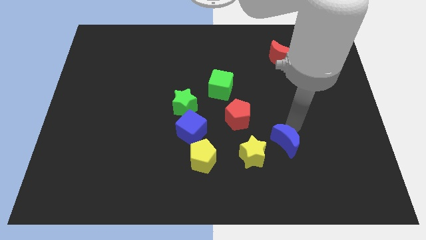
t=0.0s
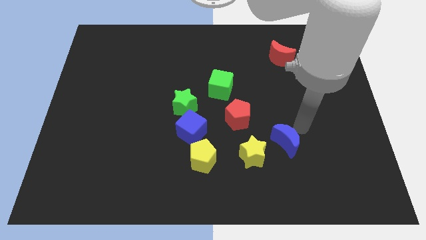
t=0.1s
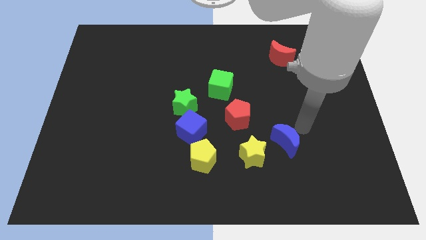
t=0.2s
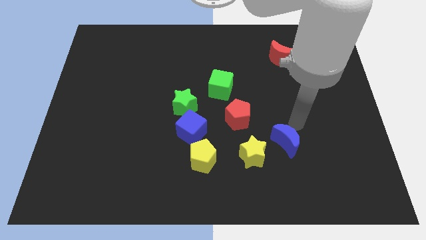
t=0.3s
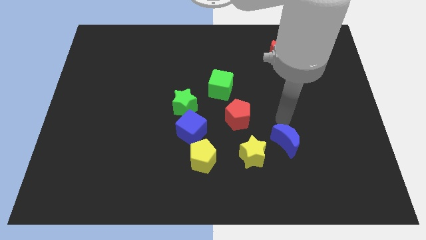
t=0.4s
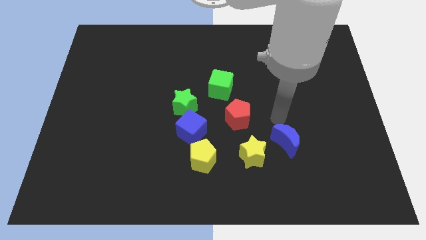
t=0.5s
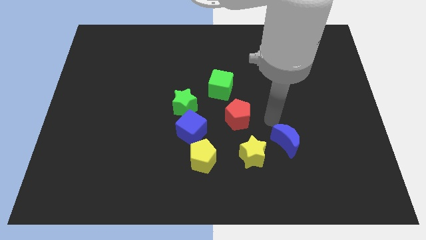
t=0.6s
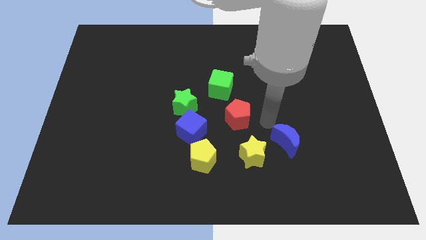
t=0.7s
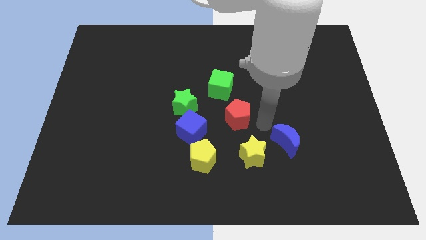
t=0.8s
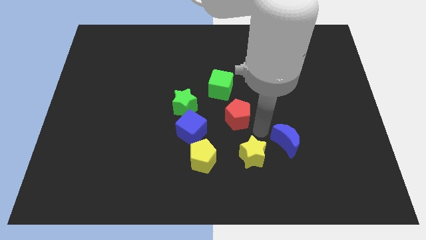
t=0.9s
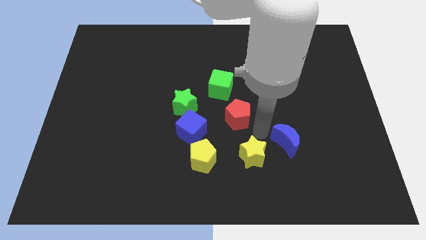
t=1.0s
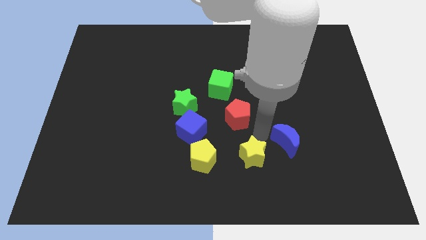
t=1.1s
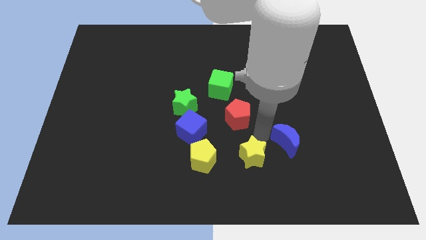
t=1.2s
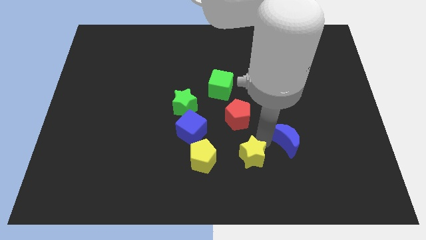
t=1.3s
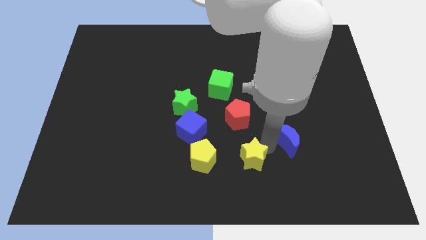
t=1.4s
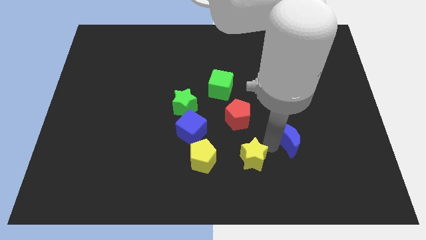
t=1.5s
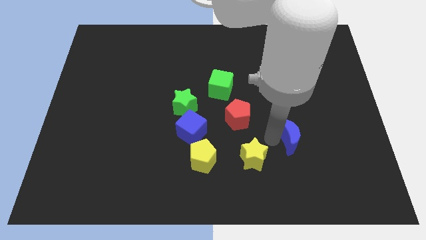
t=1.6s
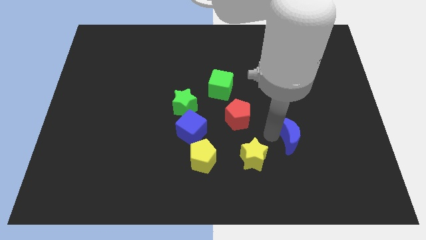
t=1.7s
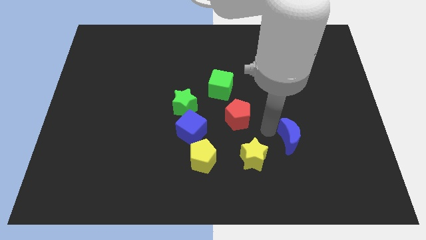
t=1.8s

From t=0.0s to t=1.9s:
point your arm close to blue moon

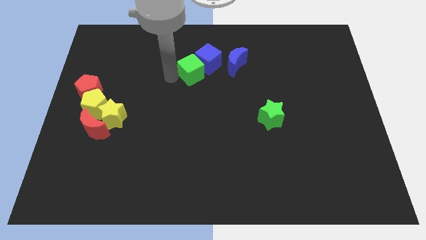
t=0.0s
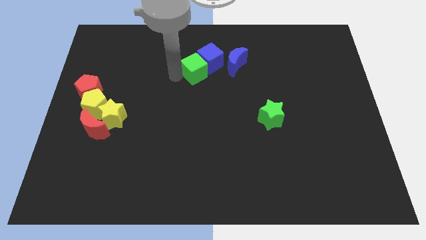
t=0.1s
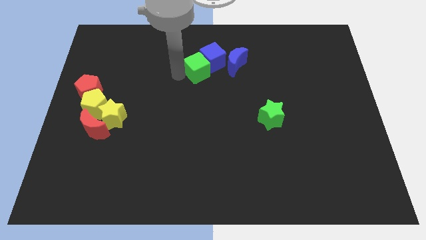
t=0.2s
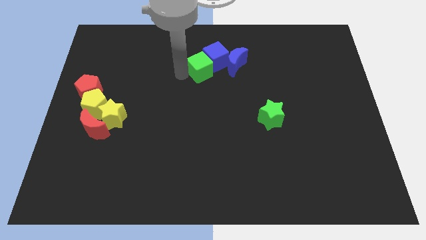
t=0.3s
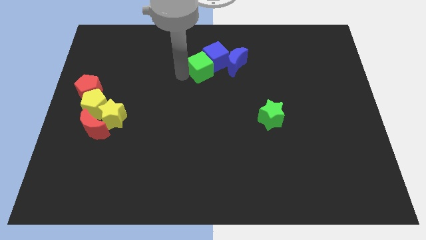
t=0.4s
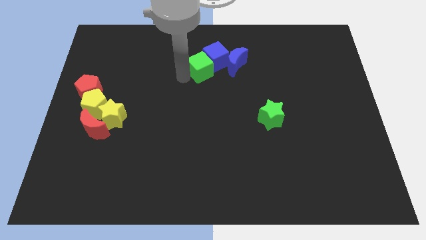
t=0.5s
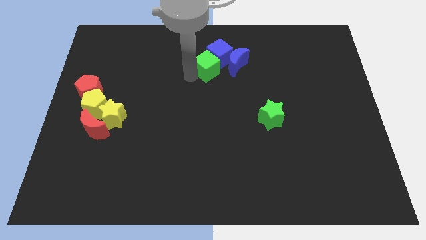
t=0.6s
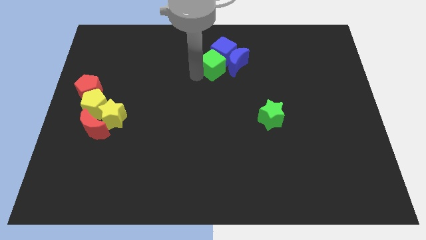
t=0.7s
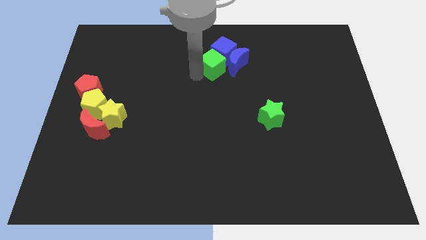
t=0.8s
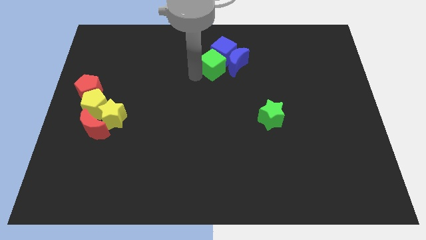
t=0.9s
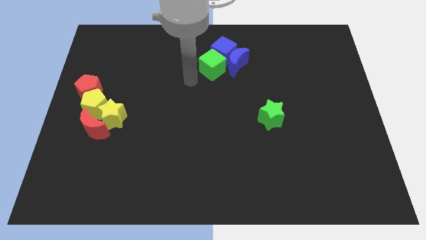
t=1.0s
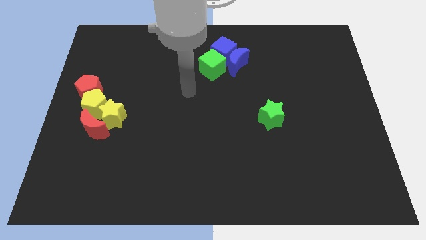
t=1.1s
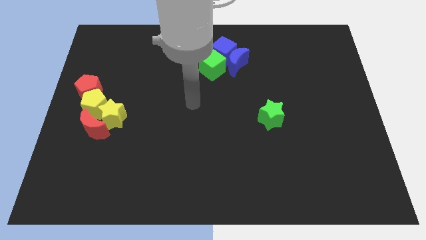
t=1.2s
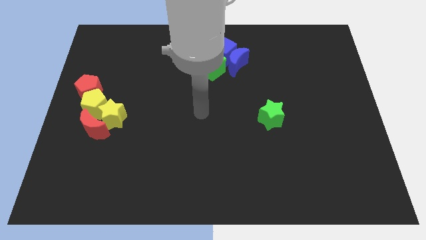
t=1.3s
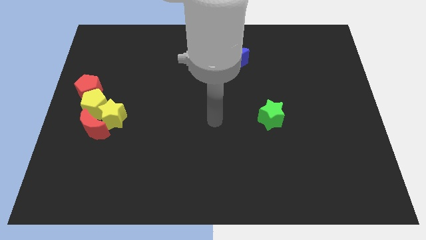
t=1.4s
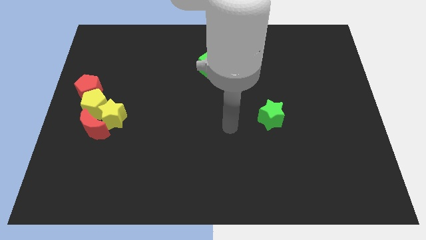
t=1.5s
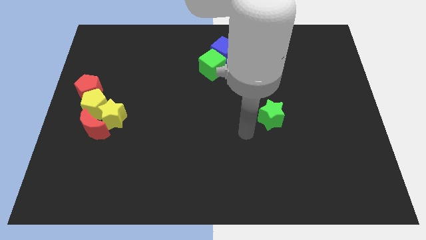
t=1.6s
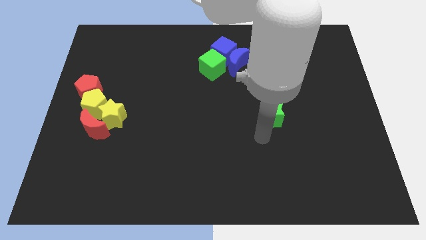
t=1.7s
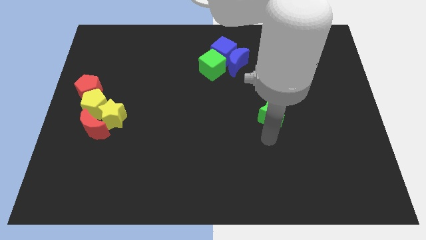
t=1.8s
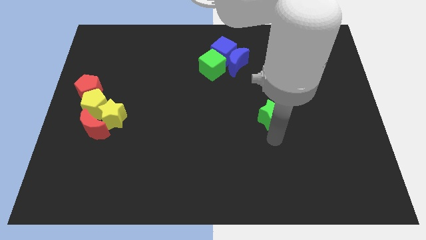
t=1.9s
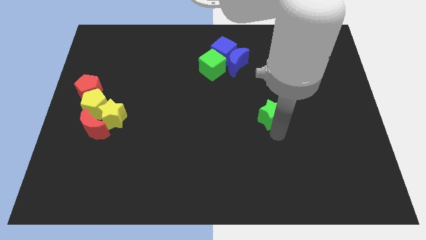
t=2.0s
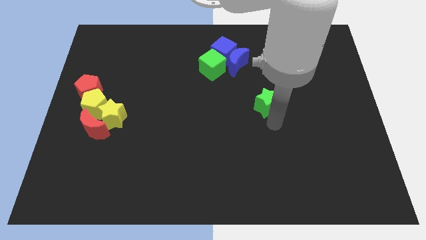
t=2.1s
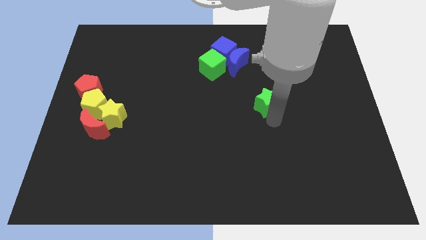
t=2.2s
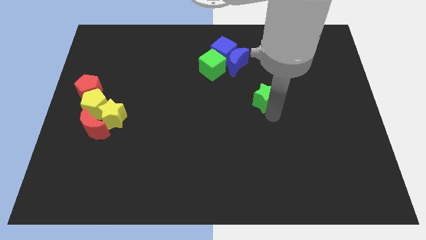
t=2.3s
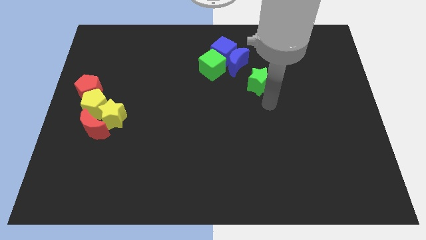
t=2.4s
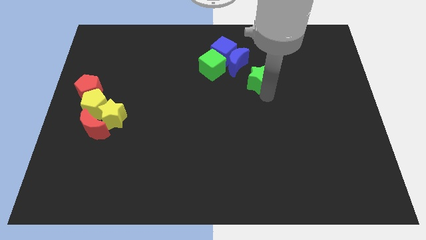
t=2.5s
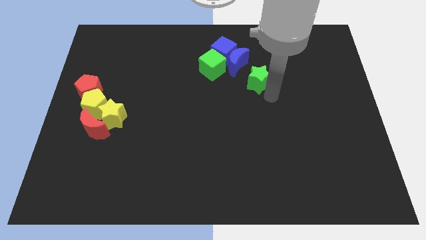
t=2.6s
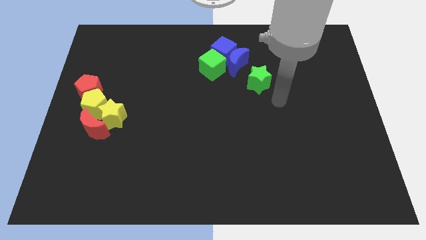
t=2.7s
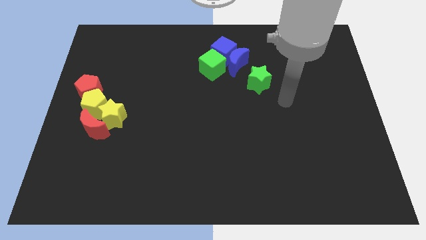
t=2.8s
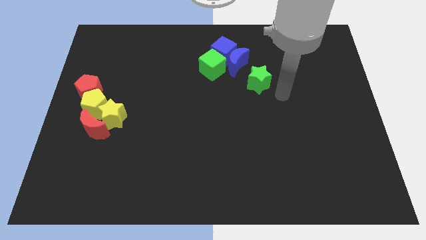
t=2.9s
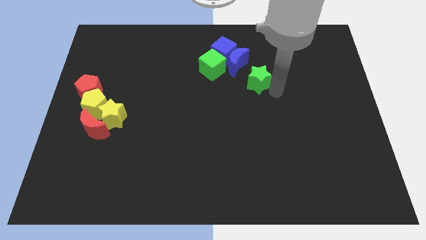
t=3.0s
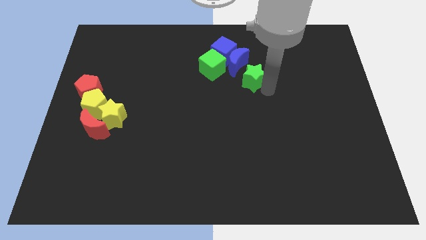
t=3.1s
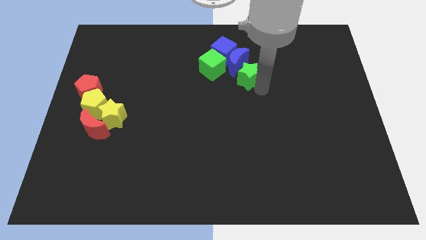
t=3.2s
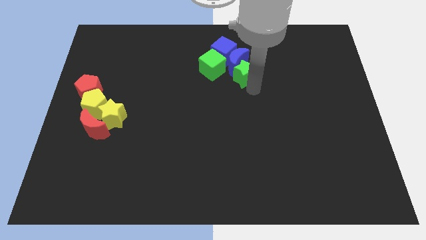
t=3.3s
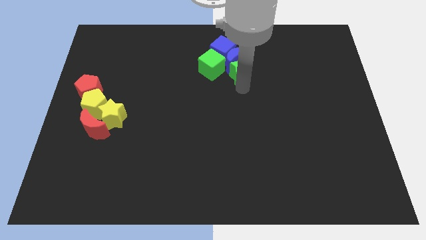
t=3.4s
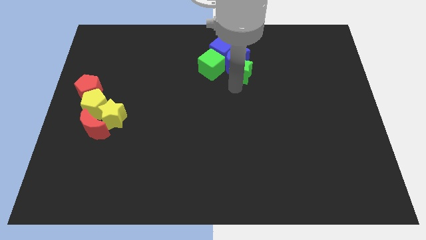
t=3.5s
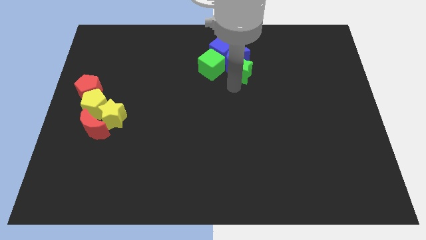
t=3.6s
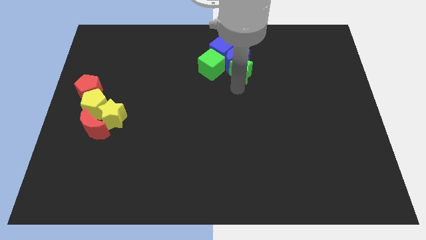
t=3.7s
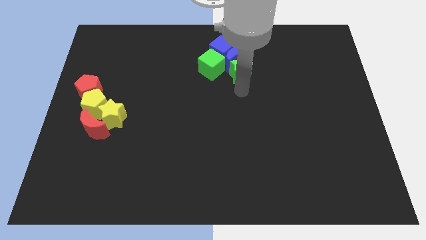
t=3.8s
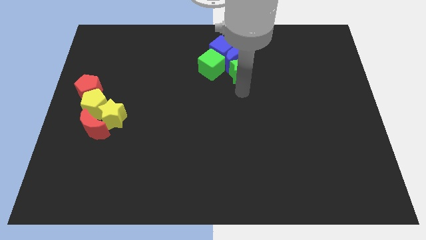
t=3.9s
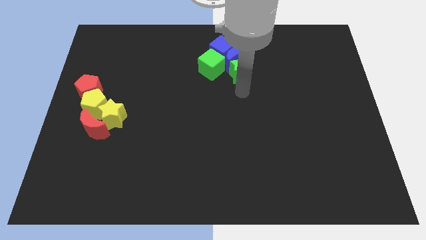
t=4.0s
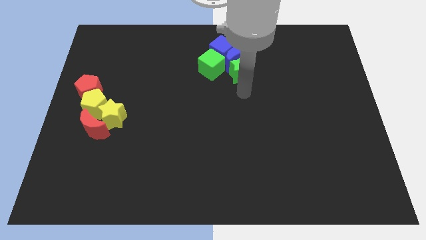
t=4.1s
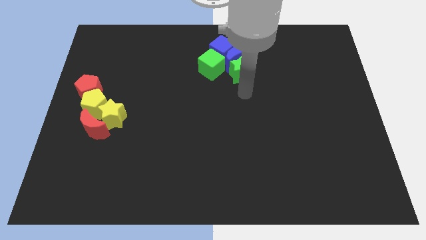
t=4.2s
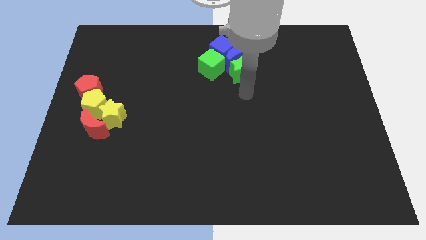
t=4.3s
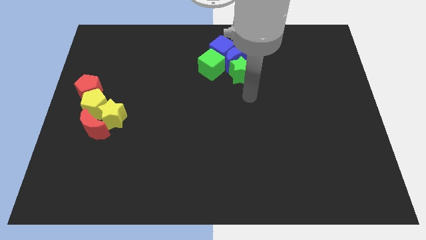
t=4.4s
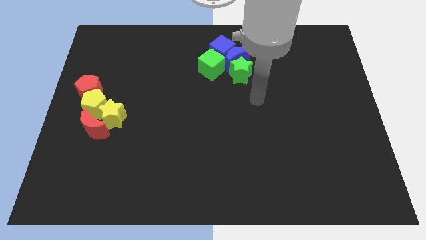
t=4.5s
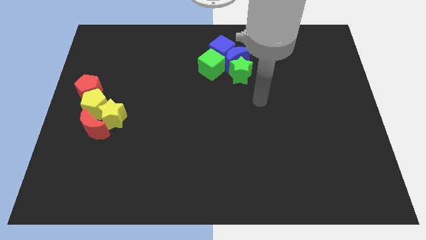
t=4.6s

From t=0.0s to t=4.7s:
drag the green star and place it below the blue moon

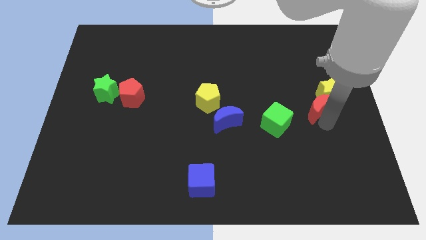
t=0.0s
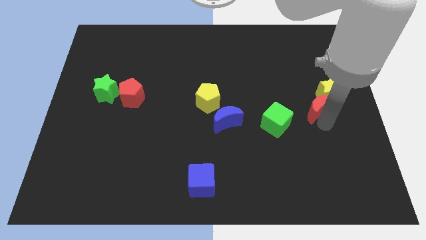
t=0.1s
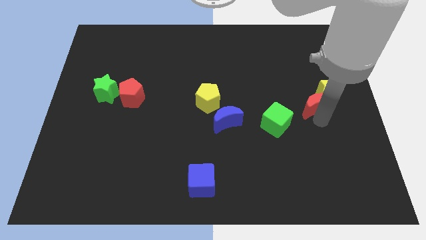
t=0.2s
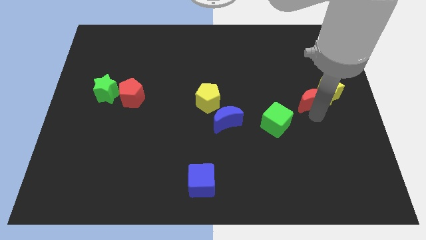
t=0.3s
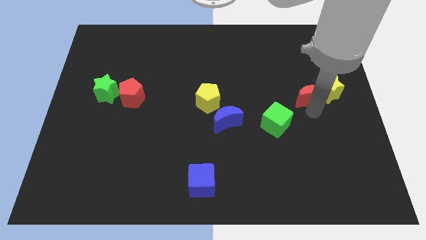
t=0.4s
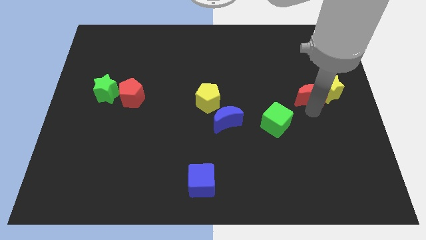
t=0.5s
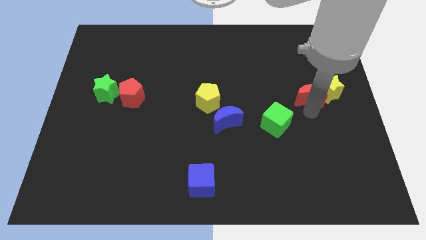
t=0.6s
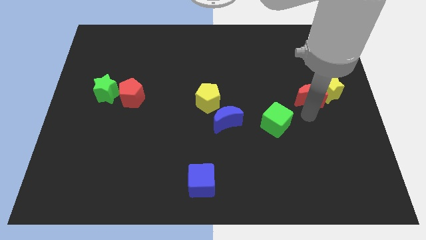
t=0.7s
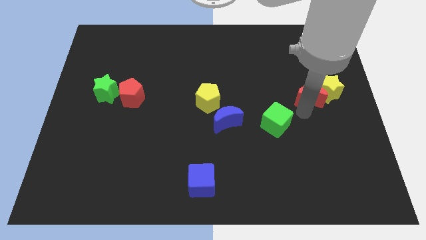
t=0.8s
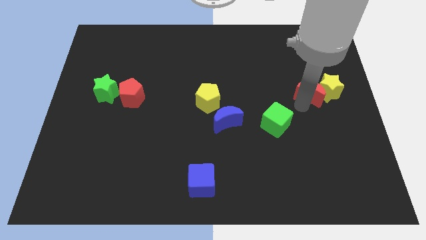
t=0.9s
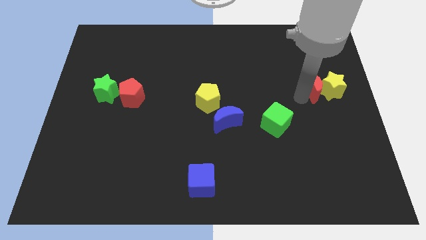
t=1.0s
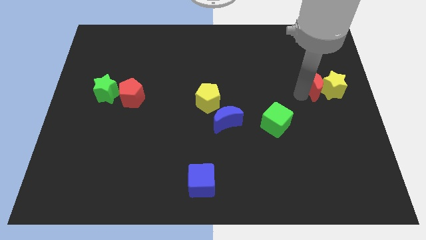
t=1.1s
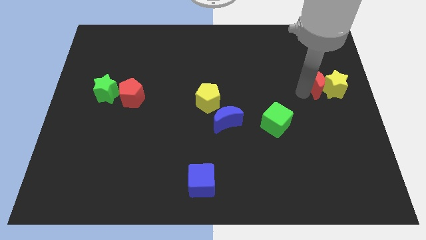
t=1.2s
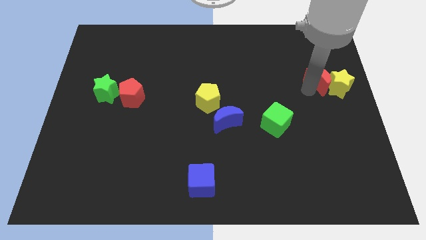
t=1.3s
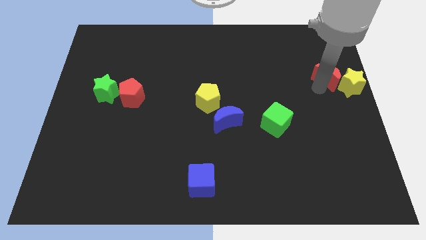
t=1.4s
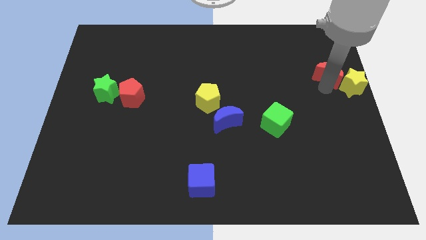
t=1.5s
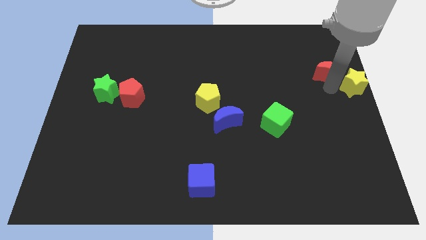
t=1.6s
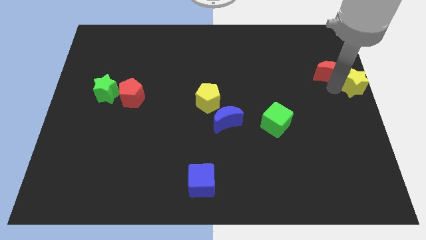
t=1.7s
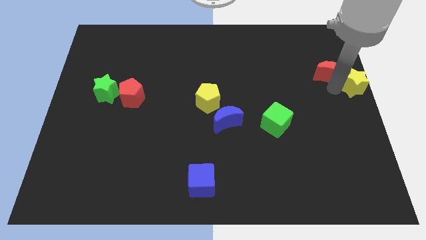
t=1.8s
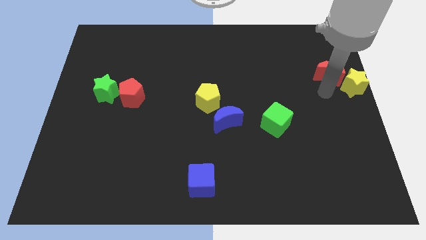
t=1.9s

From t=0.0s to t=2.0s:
place the red moon and yellow star towards the right center of the board

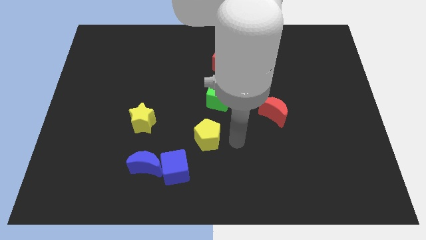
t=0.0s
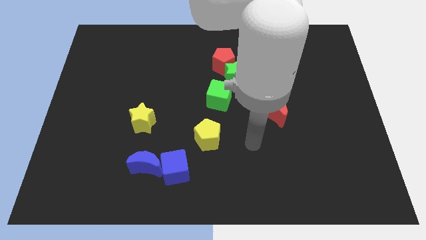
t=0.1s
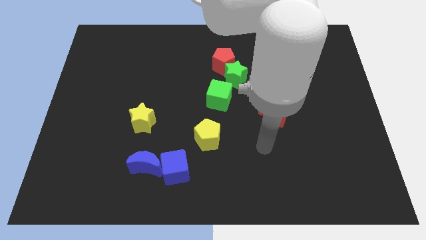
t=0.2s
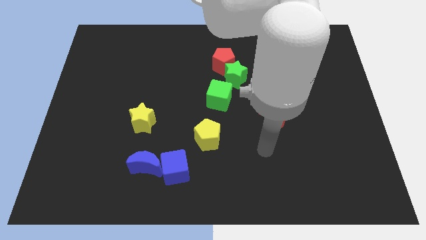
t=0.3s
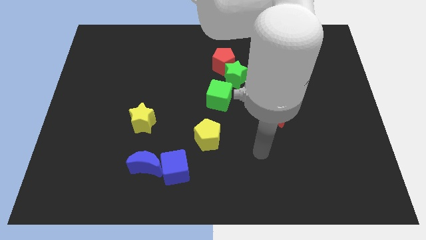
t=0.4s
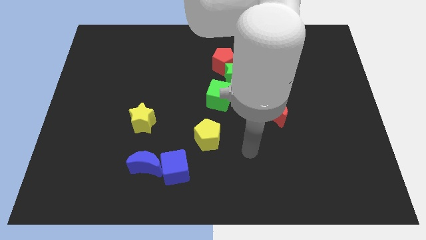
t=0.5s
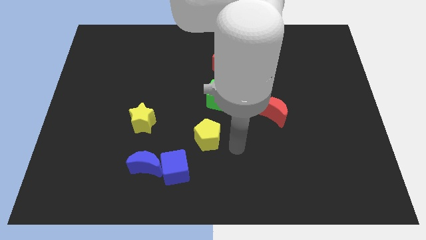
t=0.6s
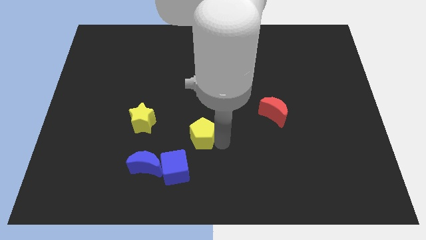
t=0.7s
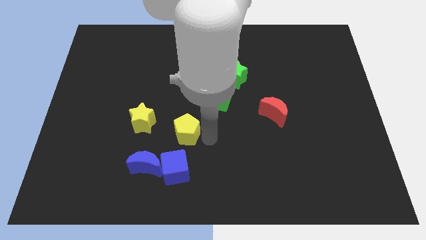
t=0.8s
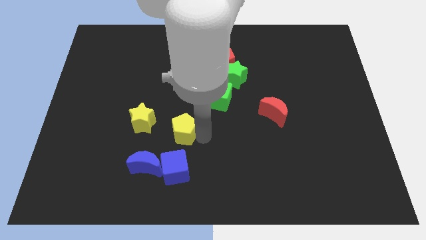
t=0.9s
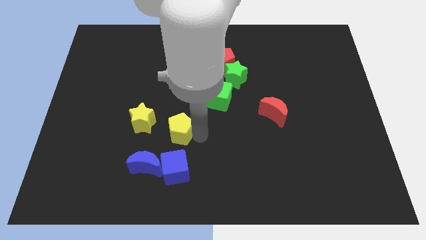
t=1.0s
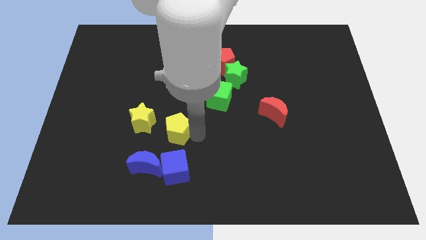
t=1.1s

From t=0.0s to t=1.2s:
move the yellow pentagon above the blue cube
